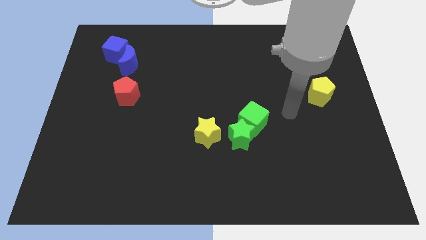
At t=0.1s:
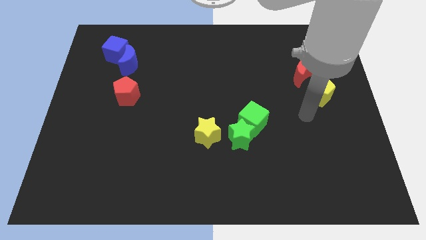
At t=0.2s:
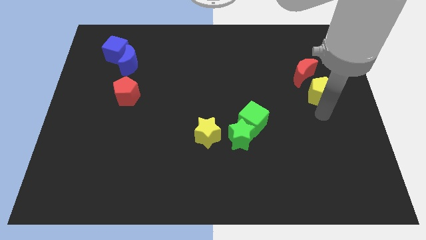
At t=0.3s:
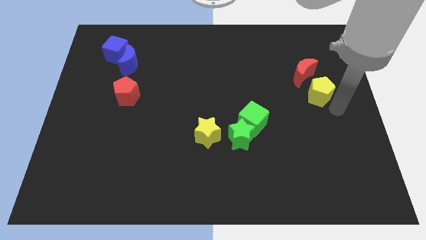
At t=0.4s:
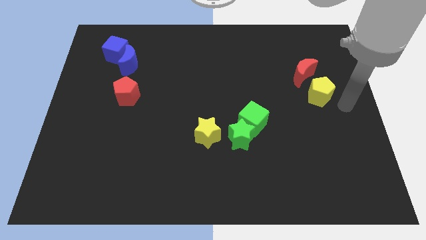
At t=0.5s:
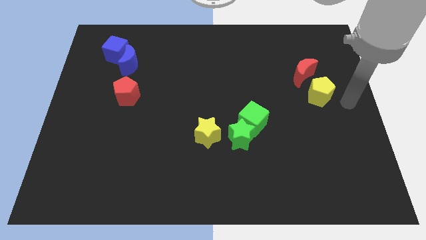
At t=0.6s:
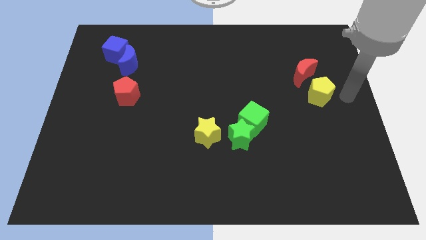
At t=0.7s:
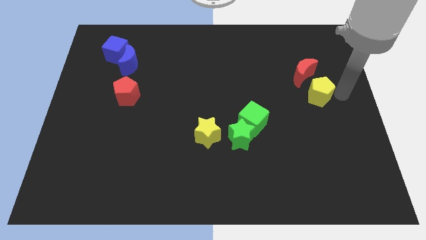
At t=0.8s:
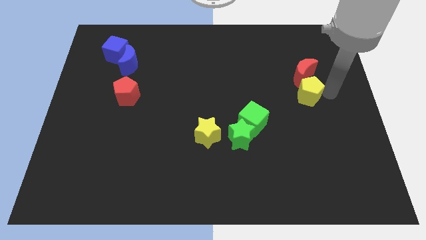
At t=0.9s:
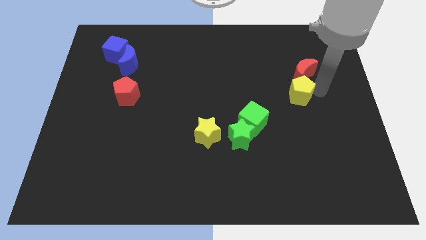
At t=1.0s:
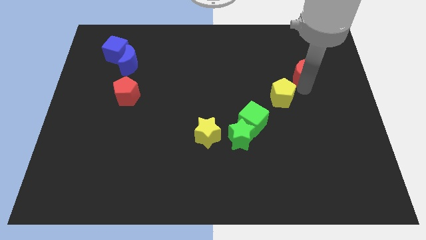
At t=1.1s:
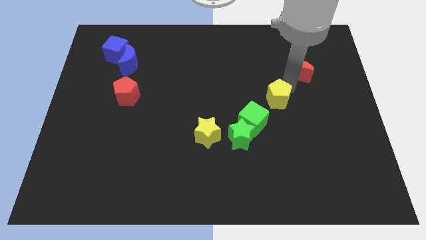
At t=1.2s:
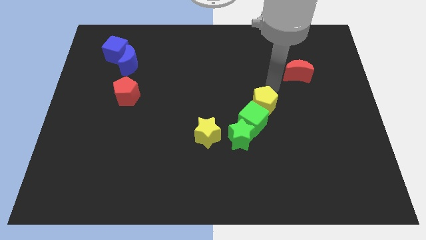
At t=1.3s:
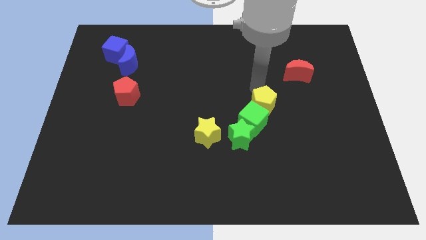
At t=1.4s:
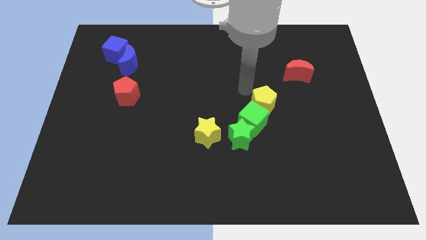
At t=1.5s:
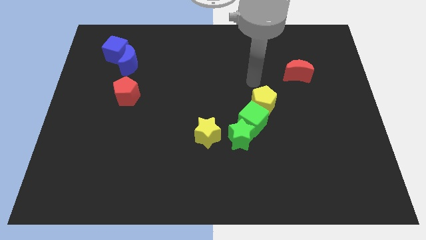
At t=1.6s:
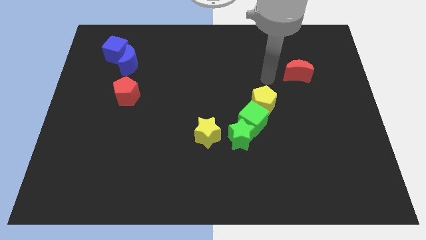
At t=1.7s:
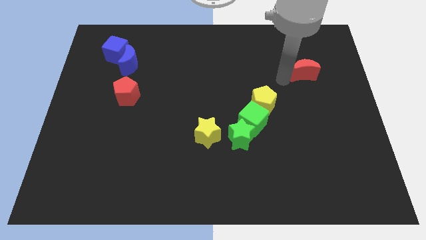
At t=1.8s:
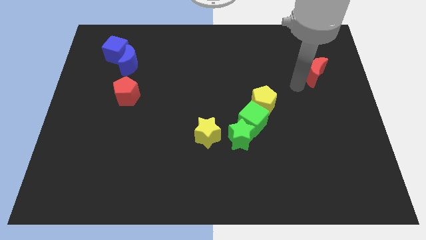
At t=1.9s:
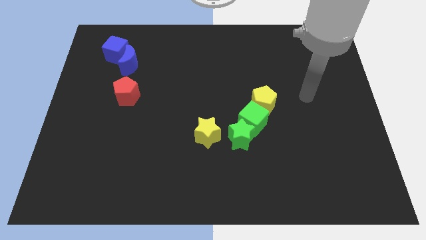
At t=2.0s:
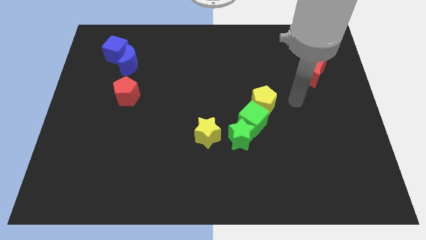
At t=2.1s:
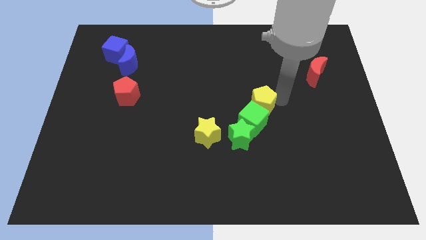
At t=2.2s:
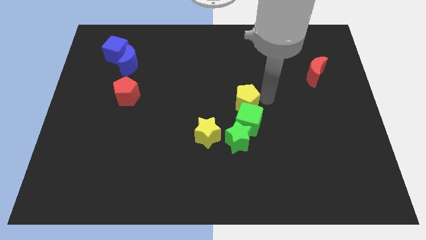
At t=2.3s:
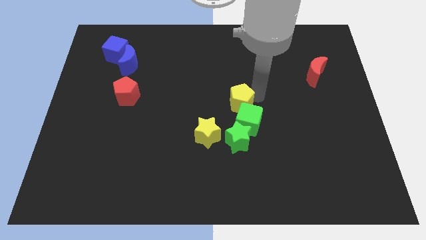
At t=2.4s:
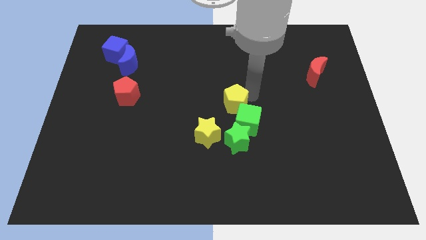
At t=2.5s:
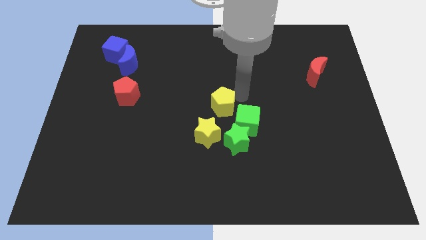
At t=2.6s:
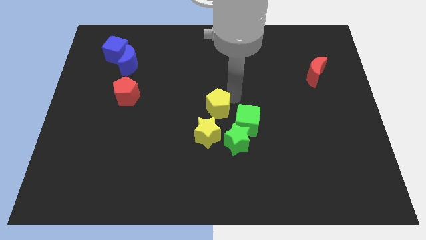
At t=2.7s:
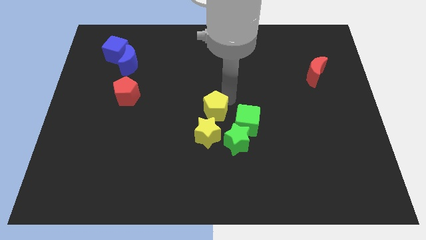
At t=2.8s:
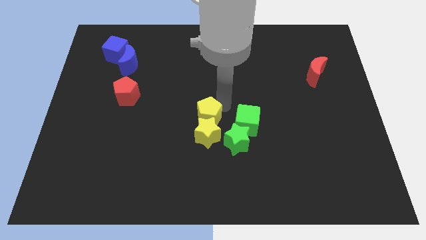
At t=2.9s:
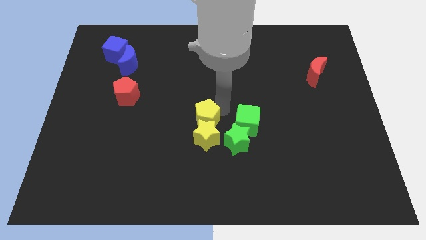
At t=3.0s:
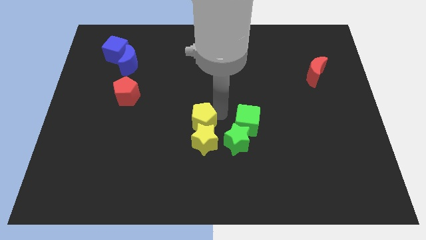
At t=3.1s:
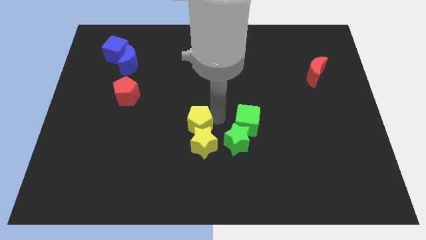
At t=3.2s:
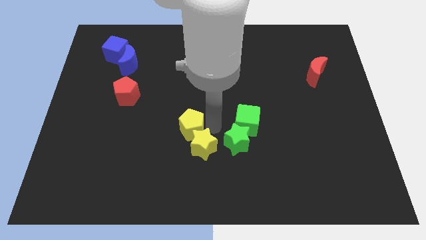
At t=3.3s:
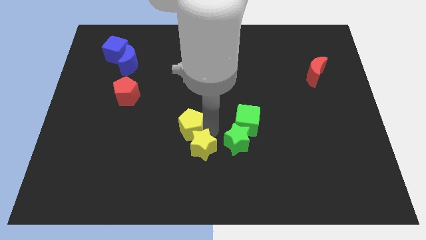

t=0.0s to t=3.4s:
push the yellow pentagon into the yellow star

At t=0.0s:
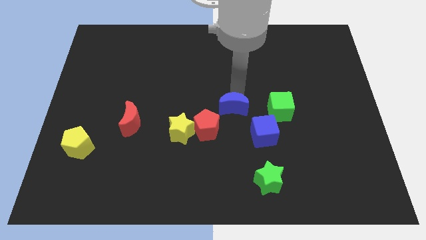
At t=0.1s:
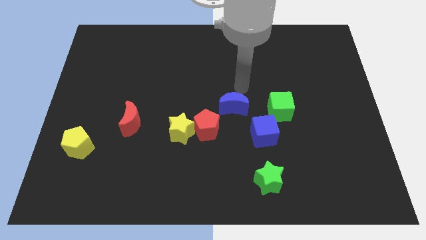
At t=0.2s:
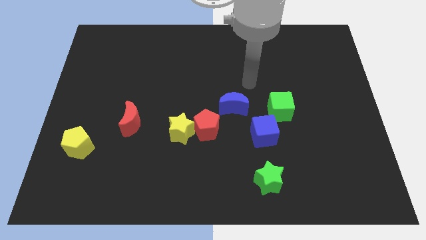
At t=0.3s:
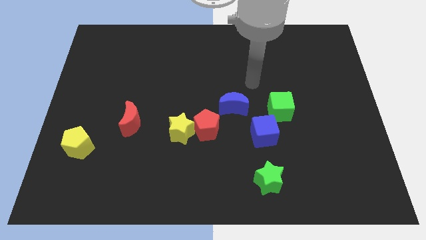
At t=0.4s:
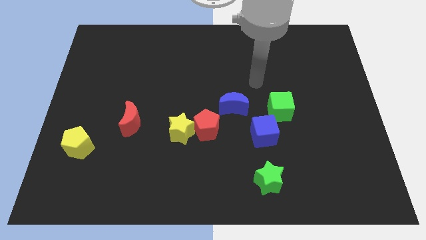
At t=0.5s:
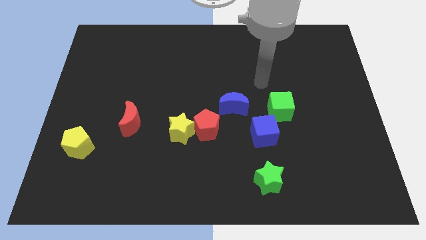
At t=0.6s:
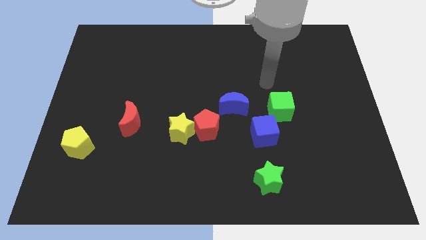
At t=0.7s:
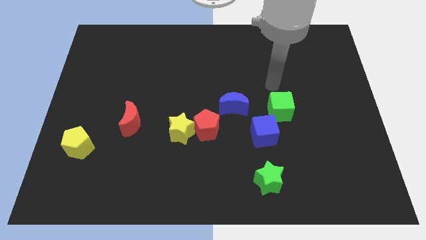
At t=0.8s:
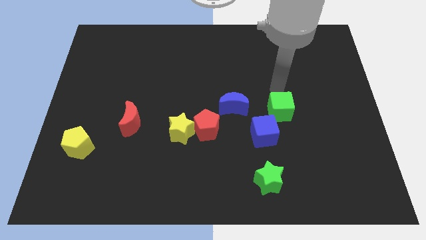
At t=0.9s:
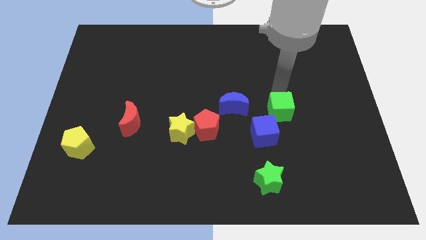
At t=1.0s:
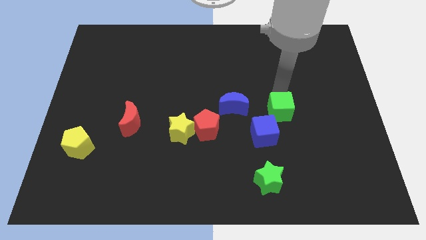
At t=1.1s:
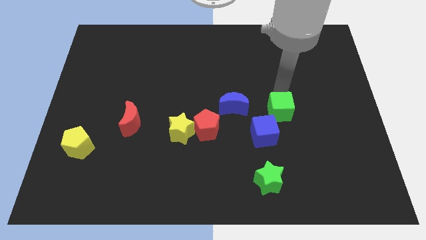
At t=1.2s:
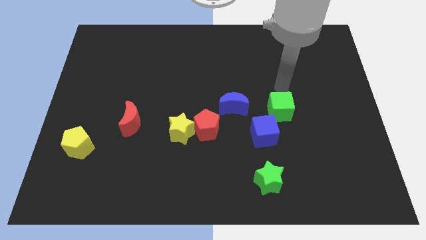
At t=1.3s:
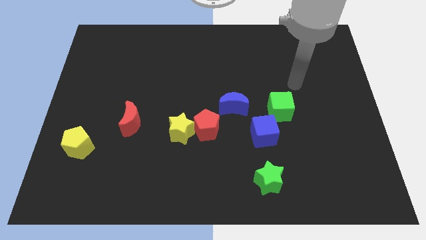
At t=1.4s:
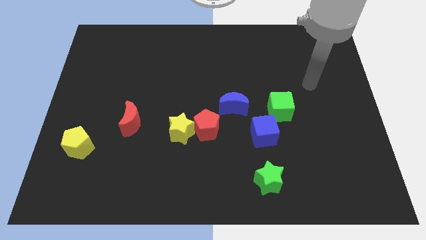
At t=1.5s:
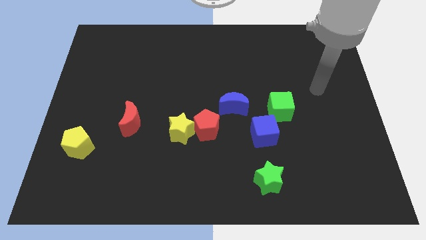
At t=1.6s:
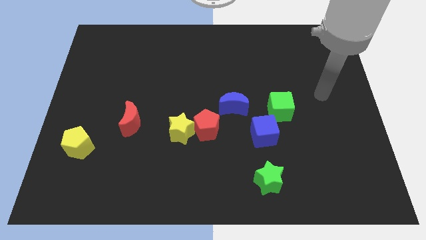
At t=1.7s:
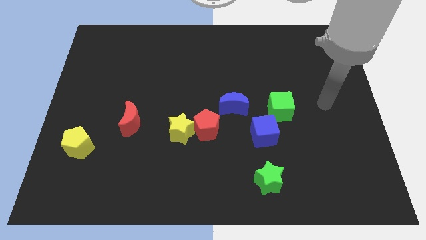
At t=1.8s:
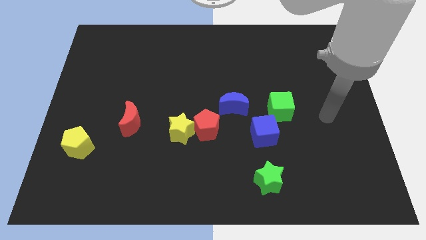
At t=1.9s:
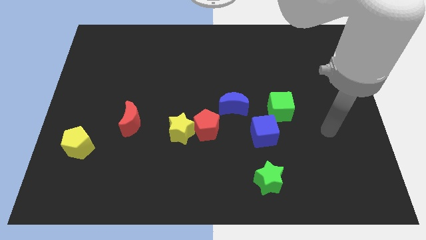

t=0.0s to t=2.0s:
move the arm away from the blue moon

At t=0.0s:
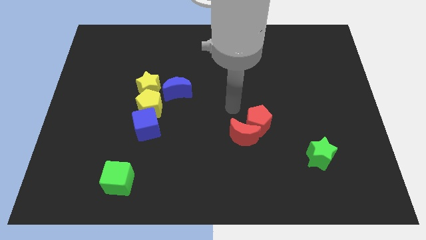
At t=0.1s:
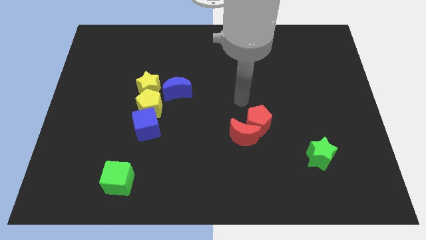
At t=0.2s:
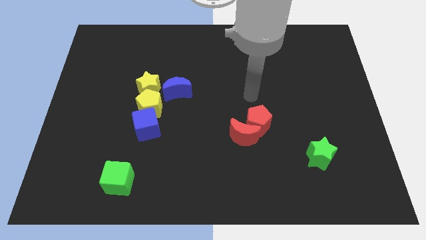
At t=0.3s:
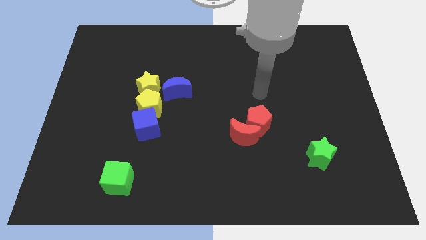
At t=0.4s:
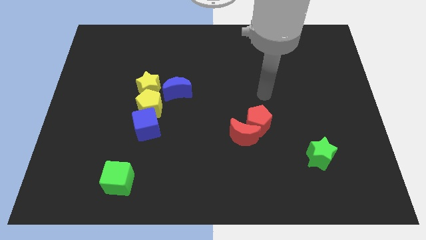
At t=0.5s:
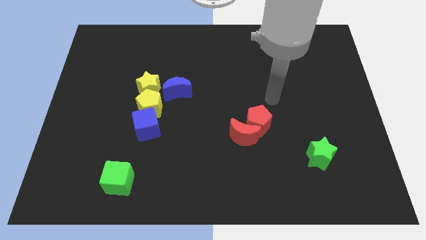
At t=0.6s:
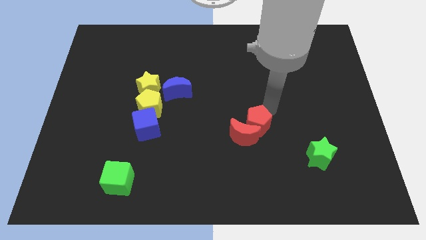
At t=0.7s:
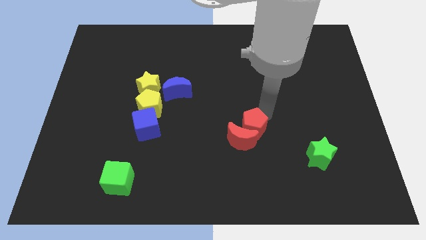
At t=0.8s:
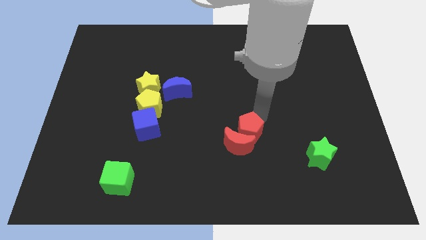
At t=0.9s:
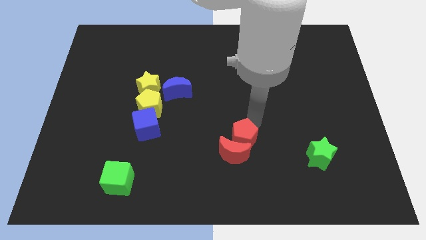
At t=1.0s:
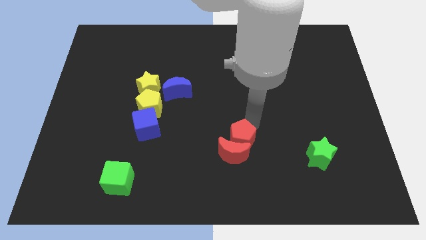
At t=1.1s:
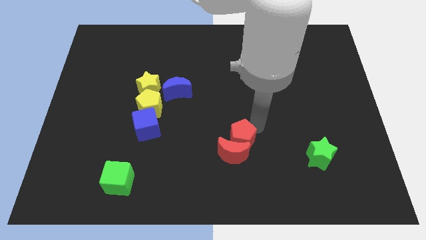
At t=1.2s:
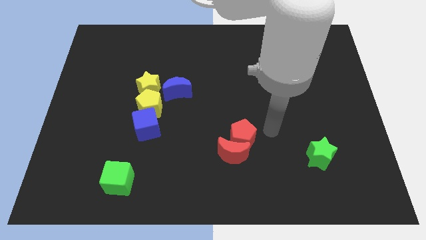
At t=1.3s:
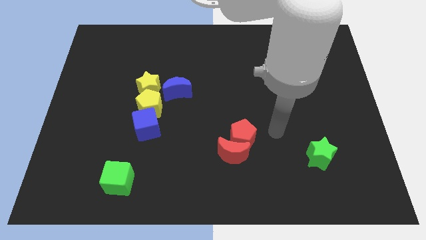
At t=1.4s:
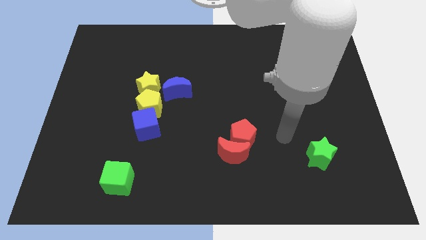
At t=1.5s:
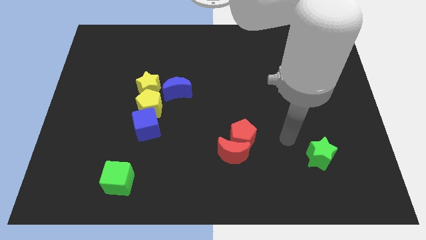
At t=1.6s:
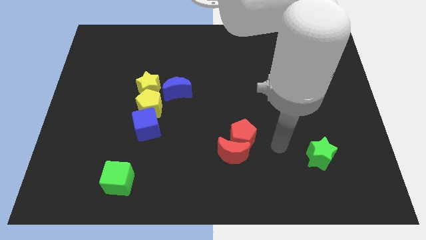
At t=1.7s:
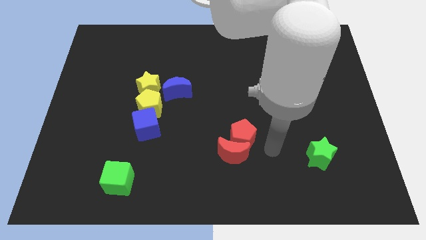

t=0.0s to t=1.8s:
push red pentagon along with red crescent

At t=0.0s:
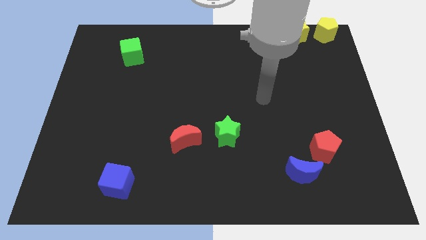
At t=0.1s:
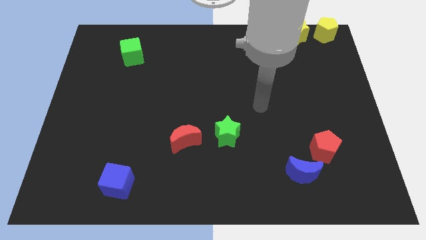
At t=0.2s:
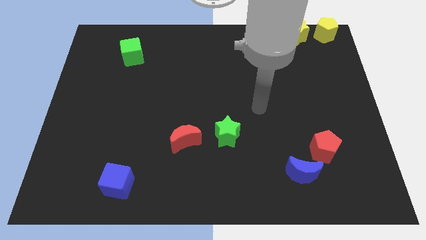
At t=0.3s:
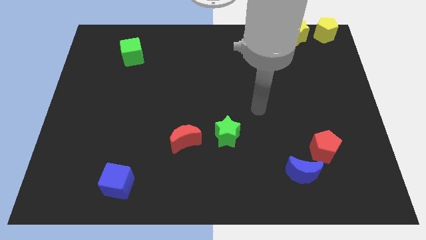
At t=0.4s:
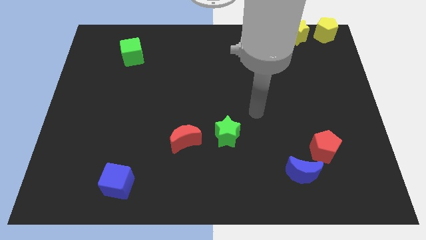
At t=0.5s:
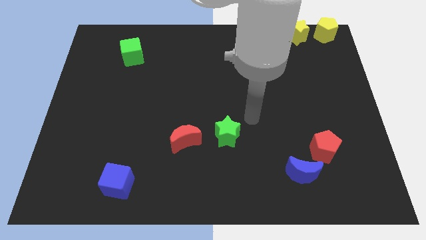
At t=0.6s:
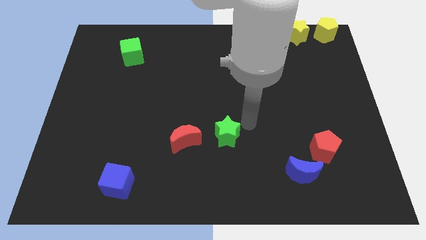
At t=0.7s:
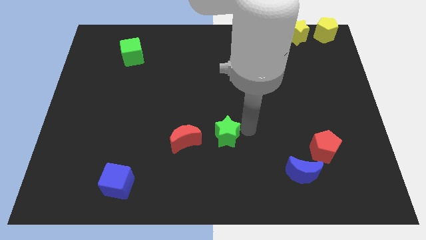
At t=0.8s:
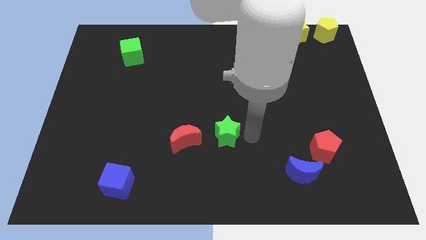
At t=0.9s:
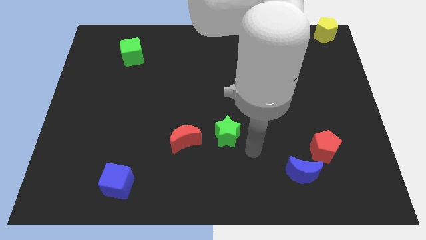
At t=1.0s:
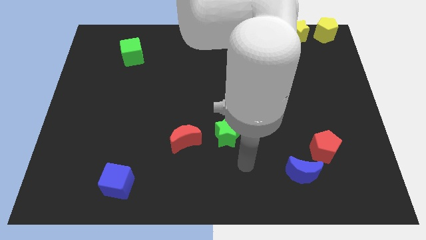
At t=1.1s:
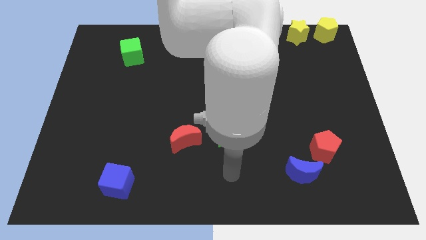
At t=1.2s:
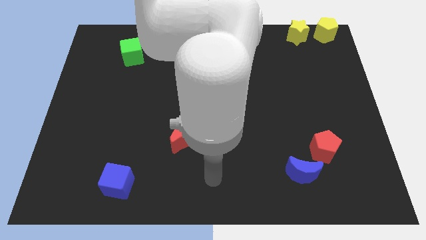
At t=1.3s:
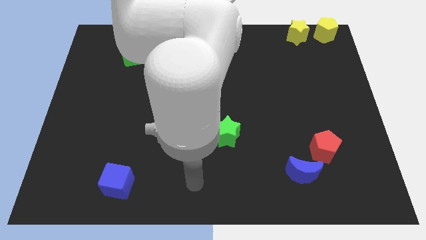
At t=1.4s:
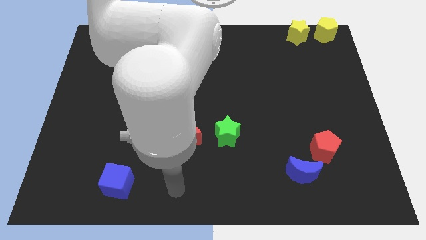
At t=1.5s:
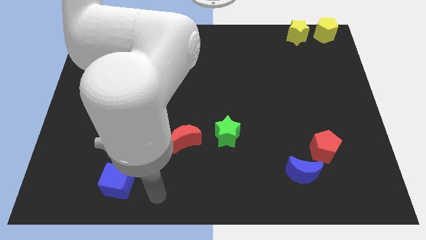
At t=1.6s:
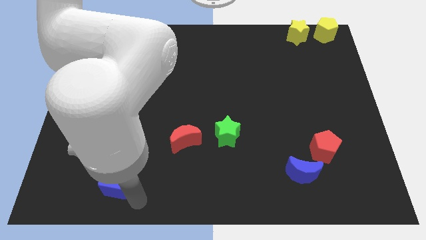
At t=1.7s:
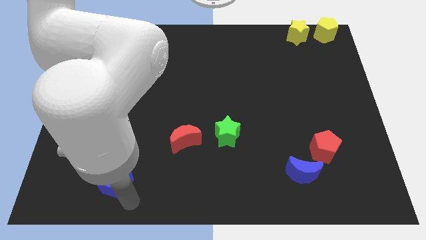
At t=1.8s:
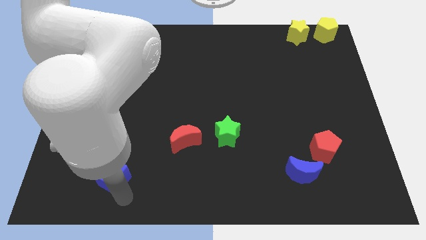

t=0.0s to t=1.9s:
place your arm at the bottom right side of the blue cube
